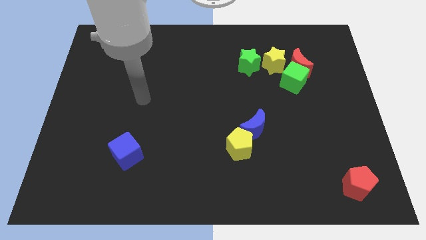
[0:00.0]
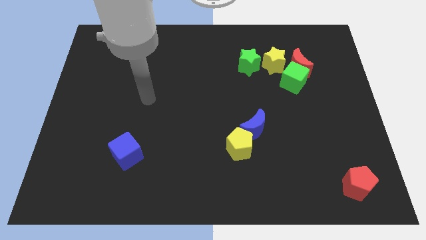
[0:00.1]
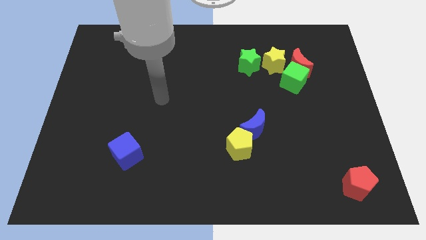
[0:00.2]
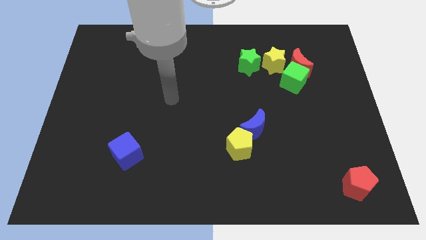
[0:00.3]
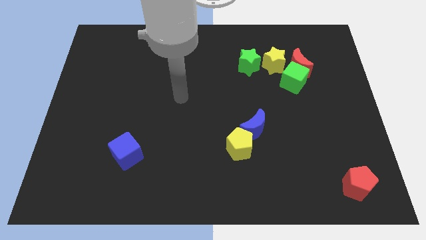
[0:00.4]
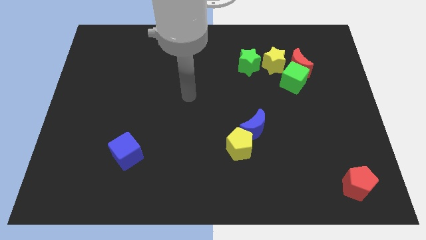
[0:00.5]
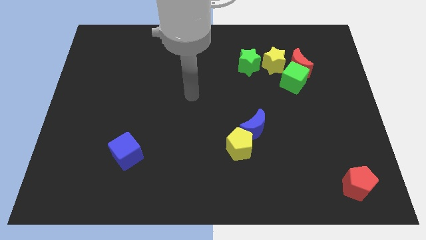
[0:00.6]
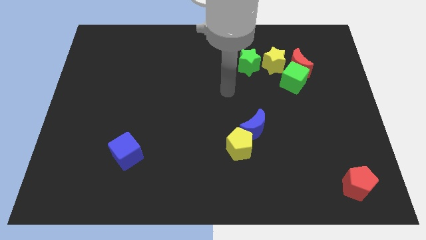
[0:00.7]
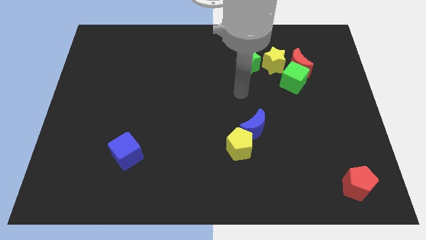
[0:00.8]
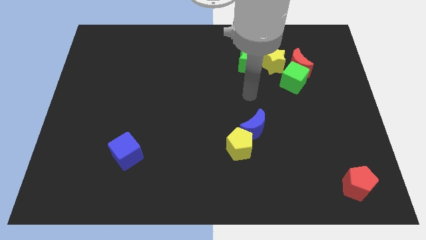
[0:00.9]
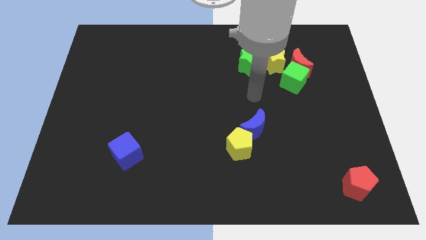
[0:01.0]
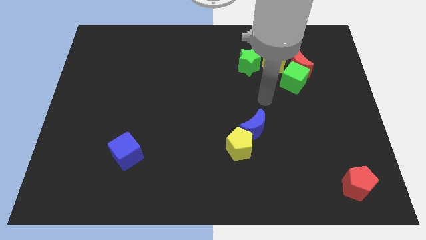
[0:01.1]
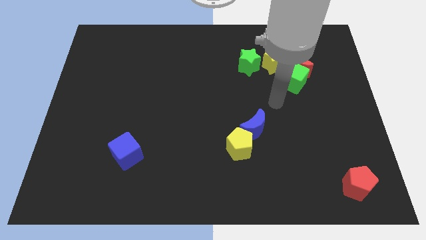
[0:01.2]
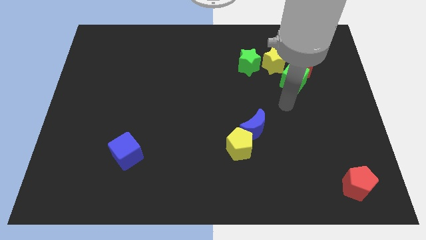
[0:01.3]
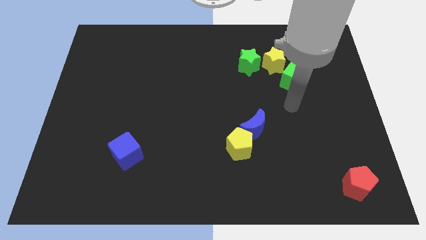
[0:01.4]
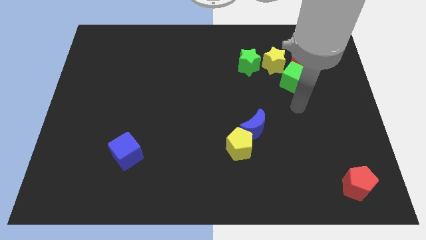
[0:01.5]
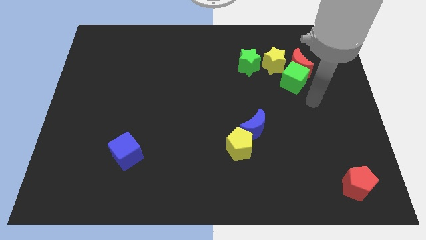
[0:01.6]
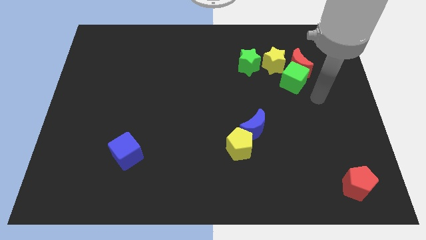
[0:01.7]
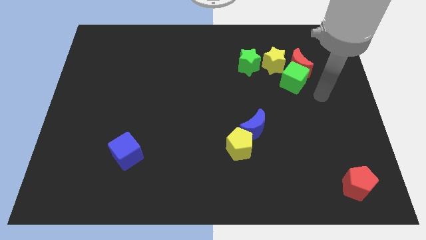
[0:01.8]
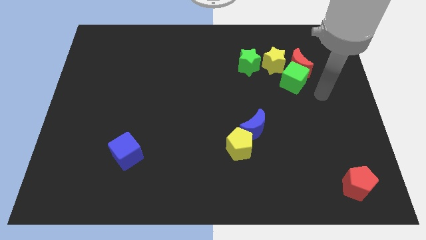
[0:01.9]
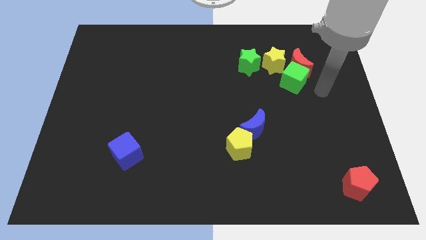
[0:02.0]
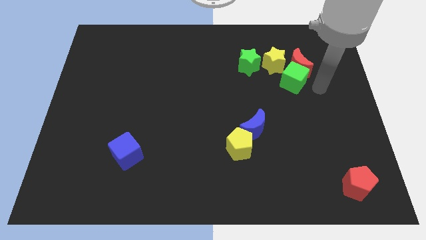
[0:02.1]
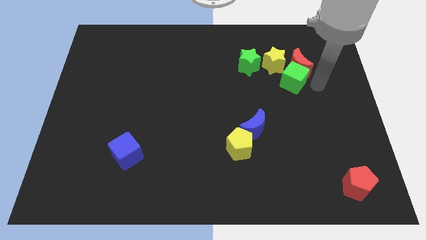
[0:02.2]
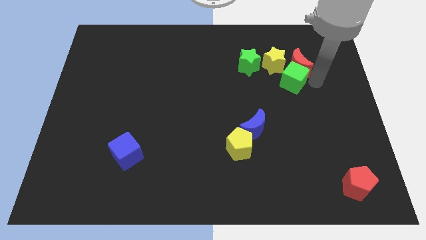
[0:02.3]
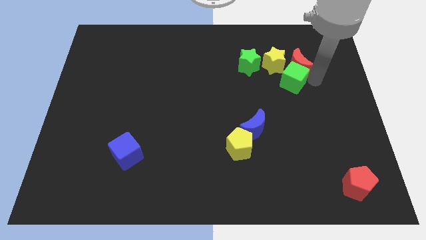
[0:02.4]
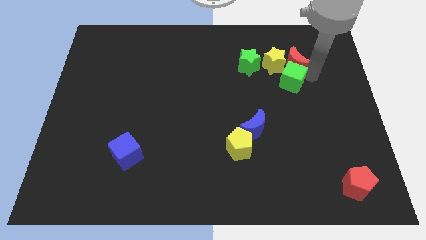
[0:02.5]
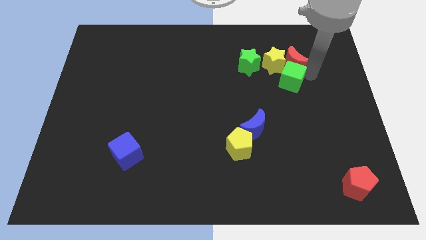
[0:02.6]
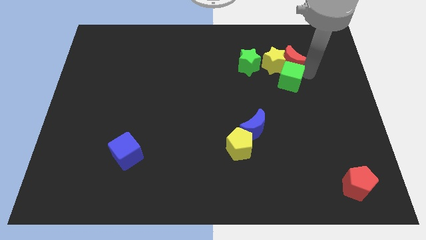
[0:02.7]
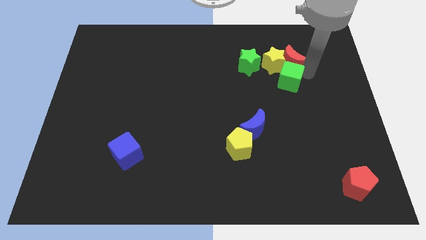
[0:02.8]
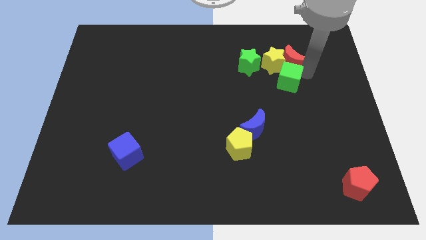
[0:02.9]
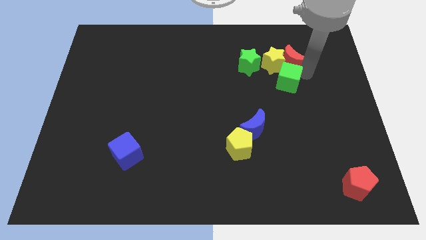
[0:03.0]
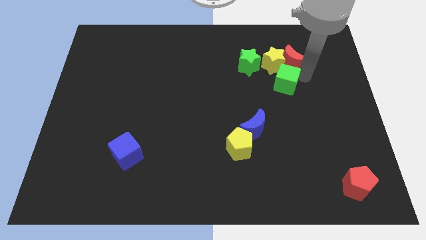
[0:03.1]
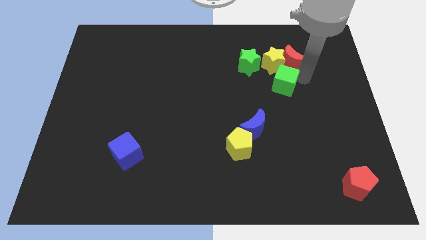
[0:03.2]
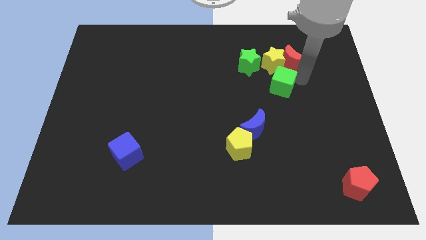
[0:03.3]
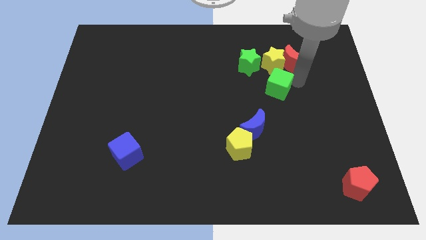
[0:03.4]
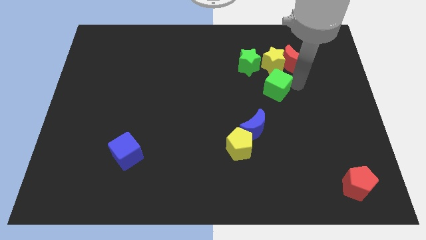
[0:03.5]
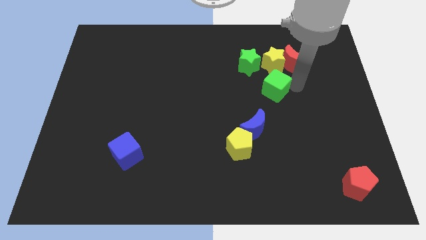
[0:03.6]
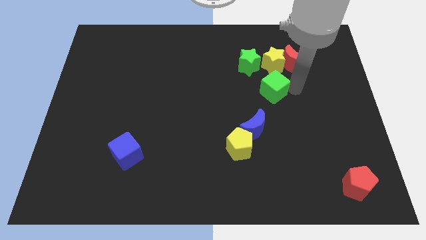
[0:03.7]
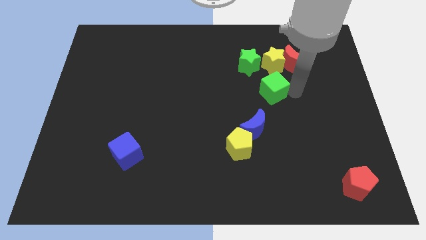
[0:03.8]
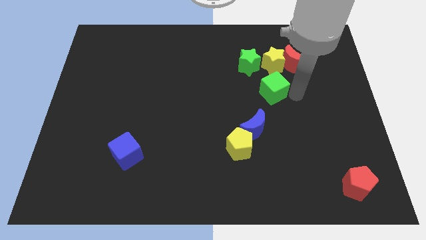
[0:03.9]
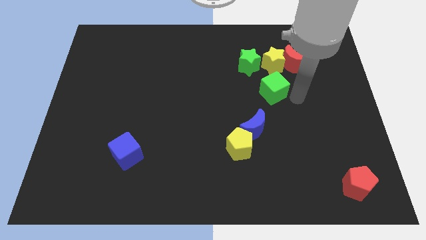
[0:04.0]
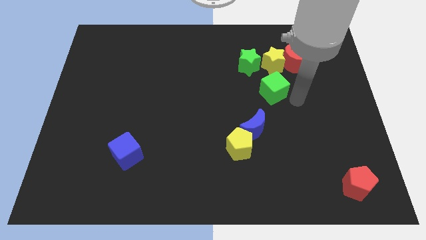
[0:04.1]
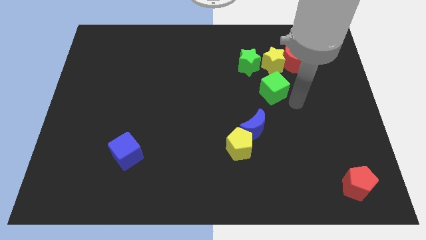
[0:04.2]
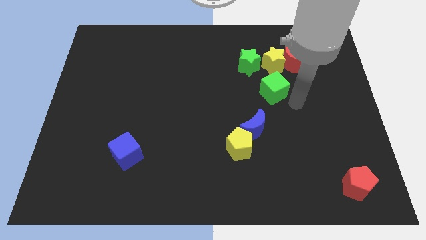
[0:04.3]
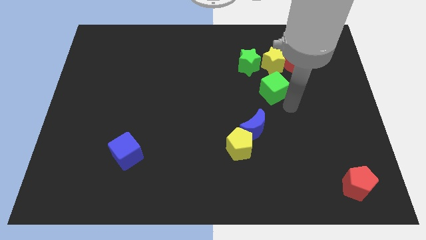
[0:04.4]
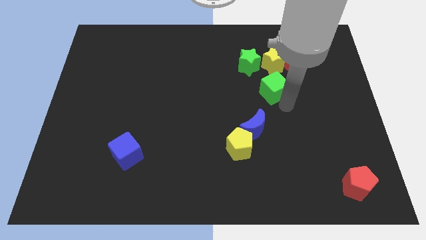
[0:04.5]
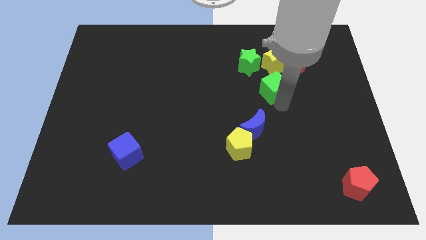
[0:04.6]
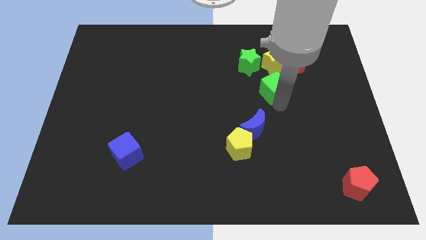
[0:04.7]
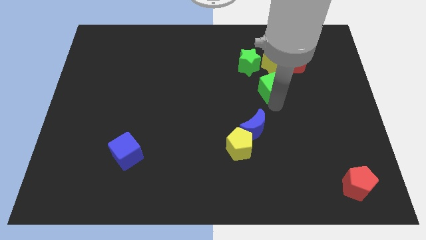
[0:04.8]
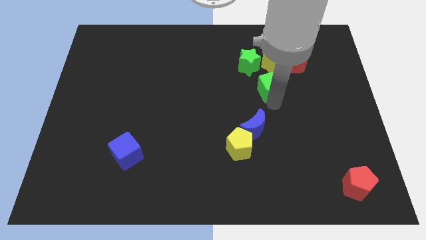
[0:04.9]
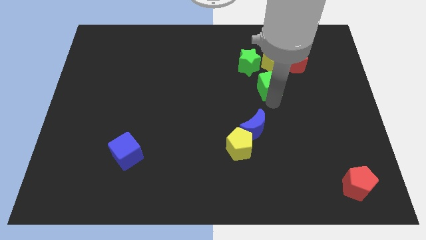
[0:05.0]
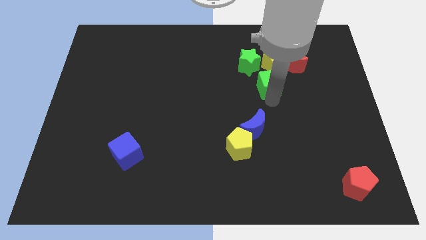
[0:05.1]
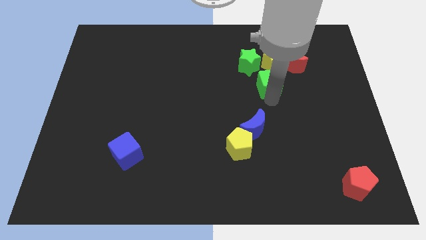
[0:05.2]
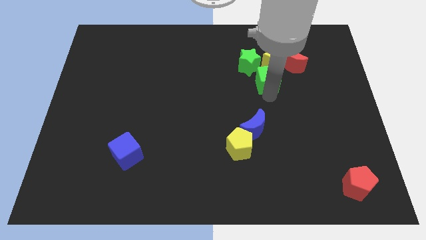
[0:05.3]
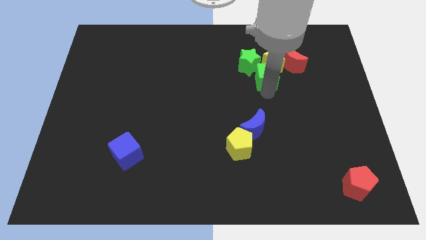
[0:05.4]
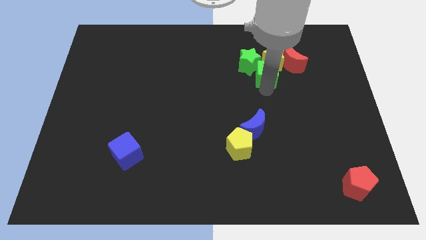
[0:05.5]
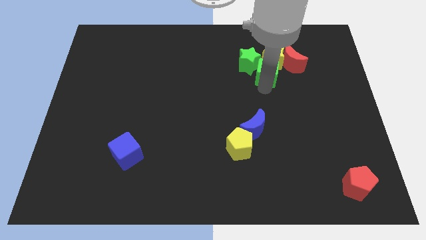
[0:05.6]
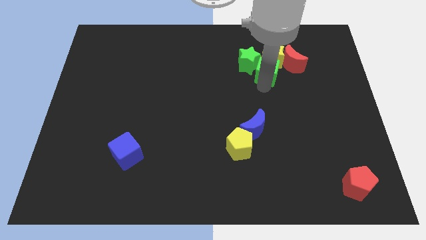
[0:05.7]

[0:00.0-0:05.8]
move the green cube next to the green star

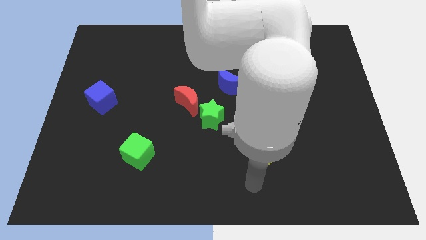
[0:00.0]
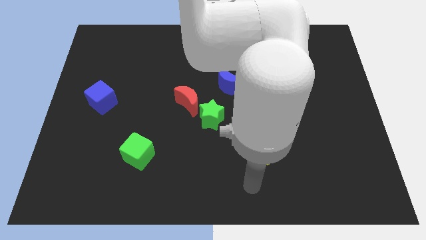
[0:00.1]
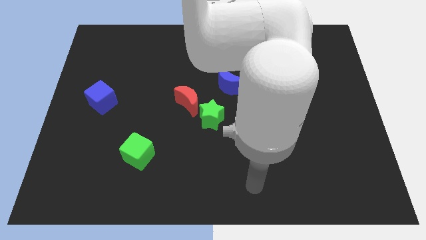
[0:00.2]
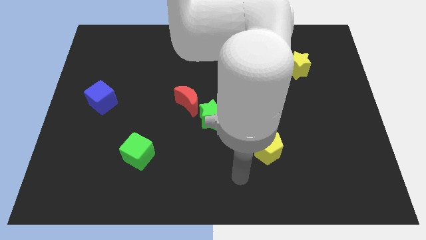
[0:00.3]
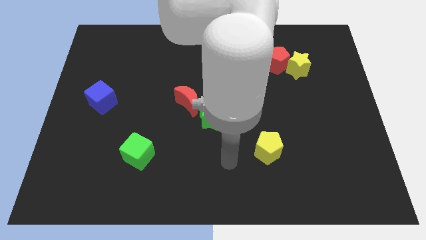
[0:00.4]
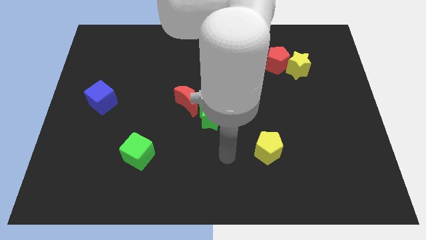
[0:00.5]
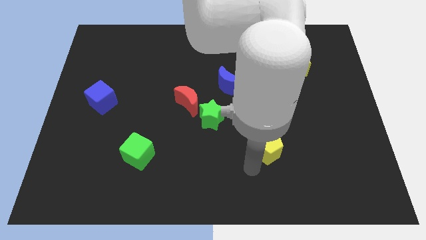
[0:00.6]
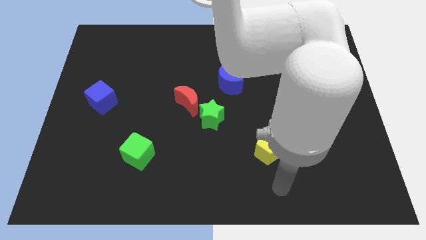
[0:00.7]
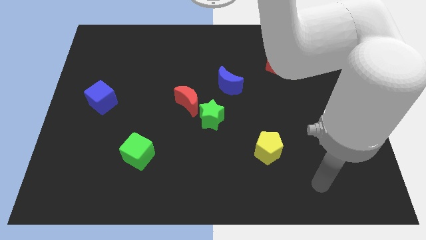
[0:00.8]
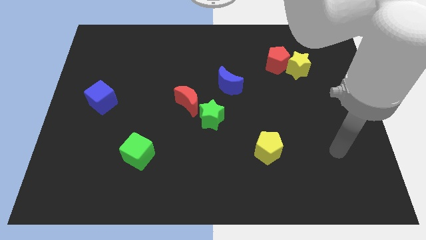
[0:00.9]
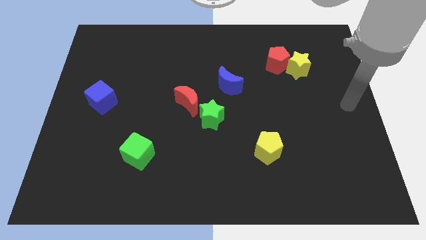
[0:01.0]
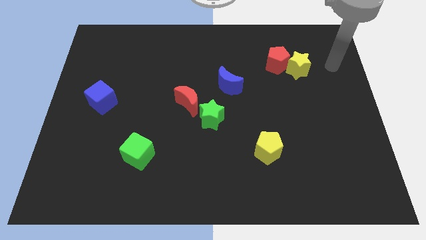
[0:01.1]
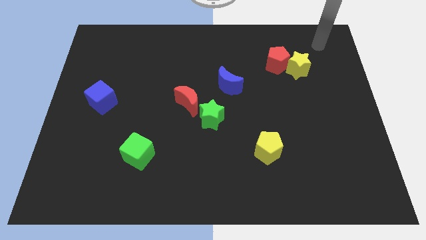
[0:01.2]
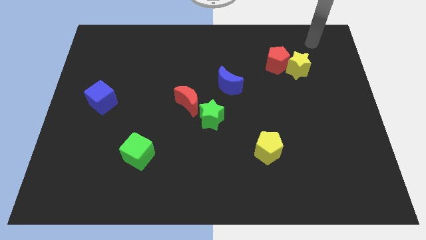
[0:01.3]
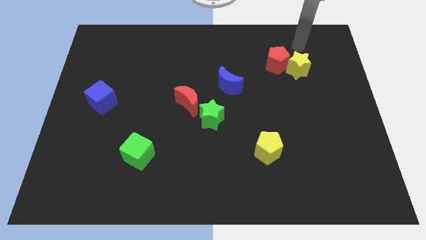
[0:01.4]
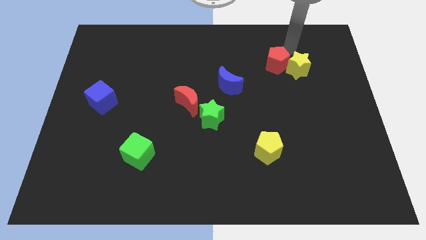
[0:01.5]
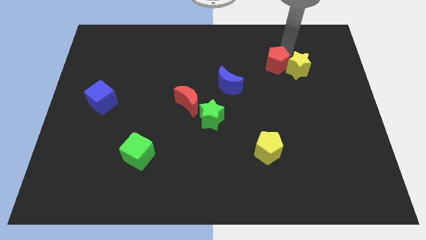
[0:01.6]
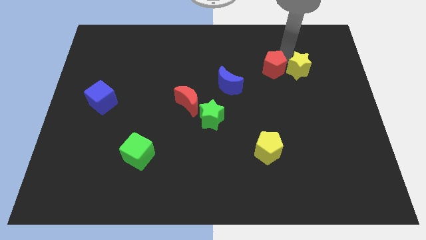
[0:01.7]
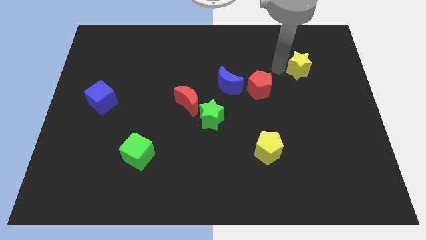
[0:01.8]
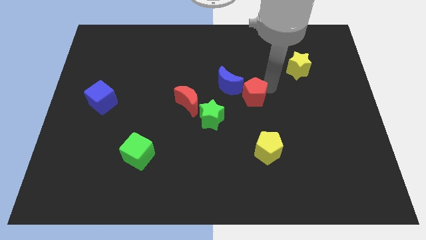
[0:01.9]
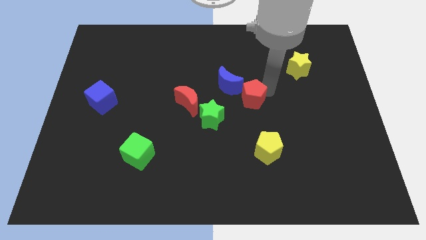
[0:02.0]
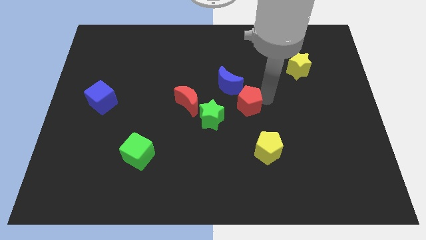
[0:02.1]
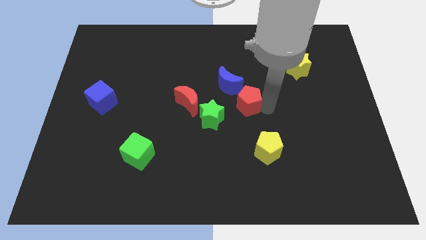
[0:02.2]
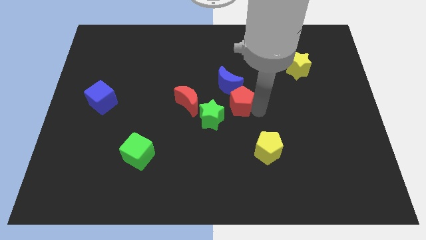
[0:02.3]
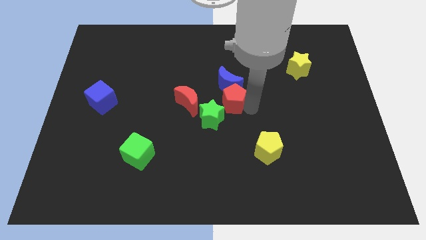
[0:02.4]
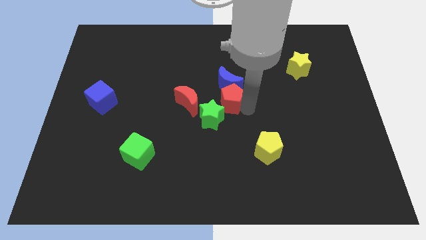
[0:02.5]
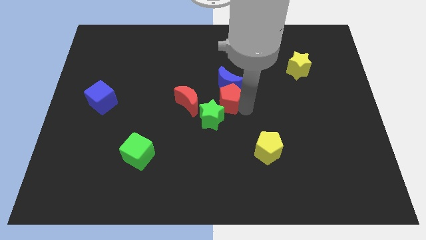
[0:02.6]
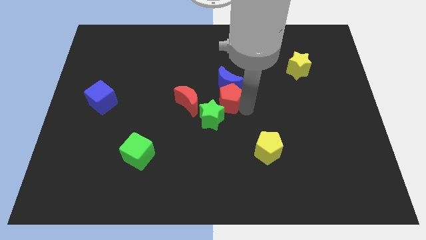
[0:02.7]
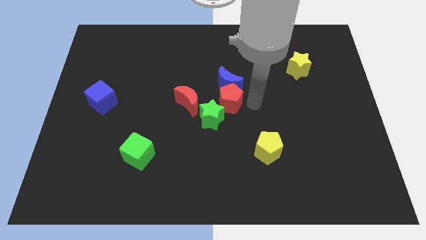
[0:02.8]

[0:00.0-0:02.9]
put the red pentagon towards the green star
